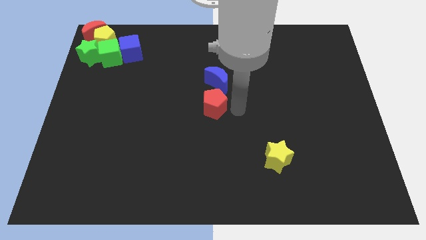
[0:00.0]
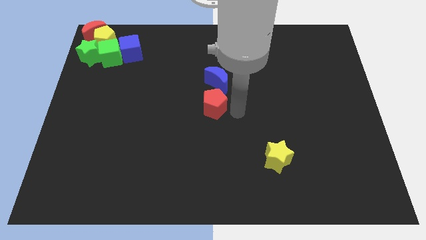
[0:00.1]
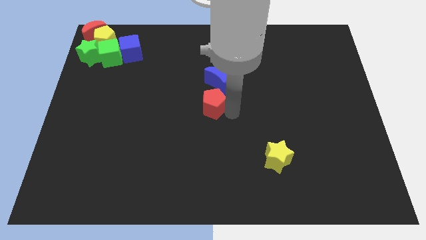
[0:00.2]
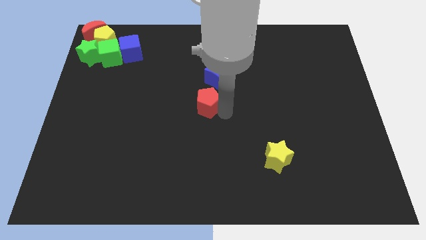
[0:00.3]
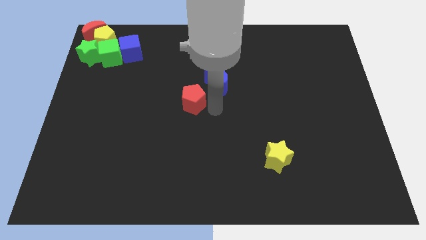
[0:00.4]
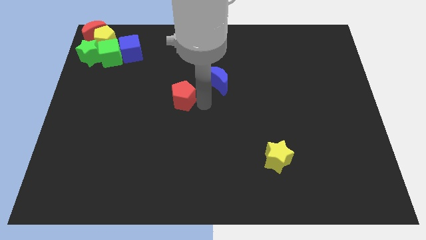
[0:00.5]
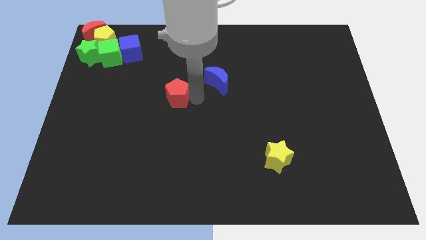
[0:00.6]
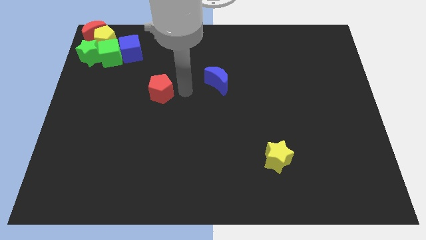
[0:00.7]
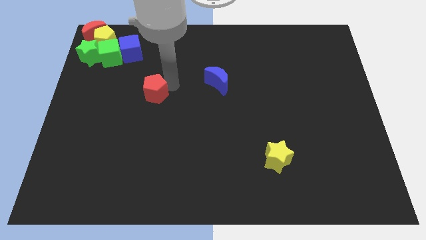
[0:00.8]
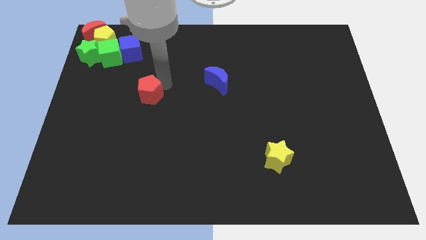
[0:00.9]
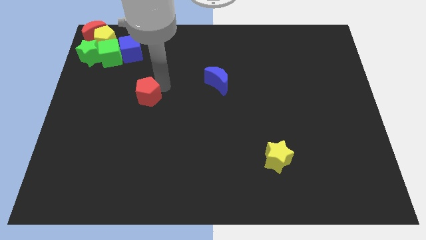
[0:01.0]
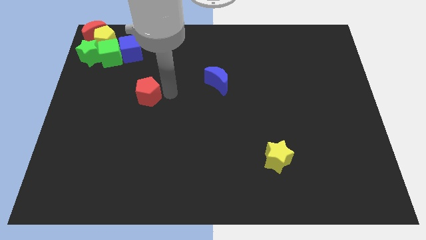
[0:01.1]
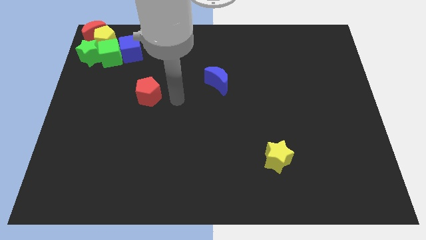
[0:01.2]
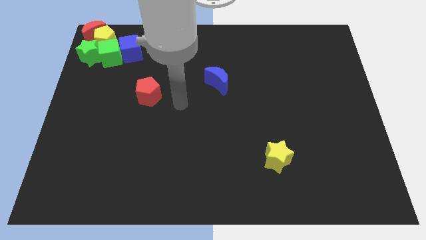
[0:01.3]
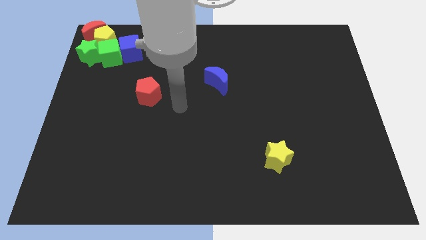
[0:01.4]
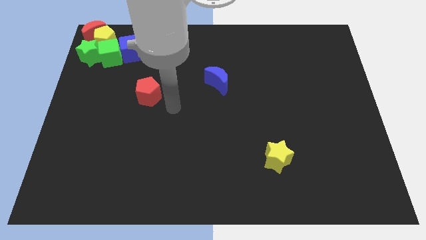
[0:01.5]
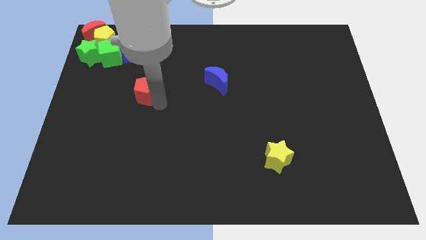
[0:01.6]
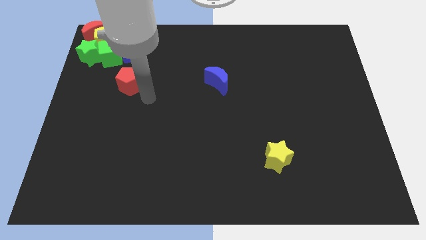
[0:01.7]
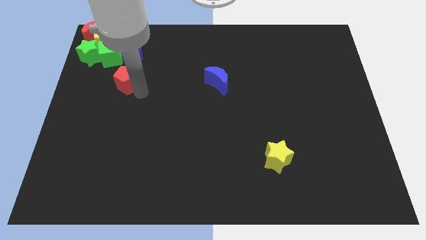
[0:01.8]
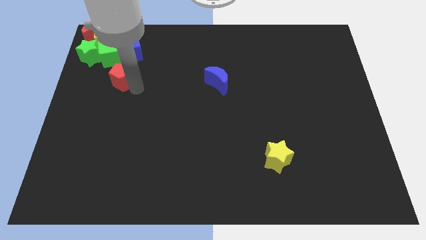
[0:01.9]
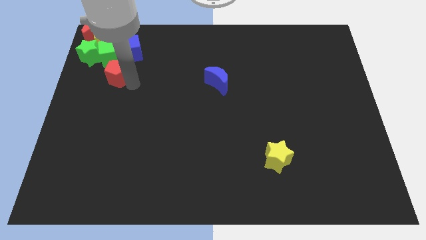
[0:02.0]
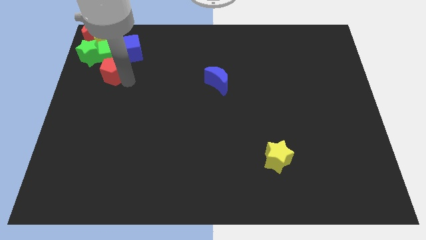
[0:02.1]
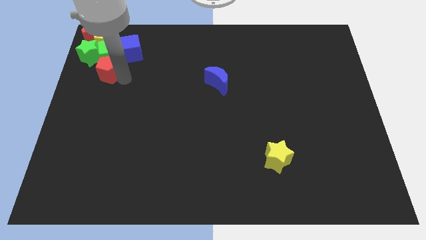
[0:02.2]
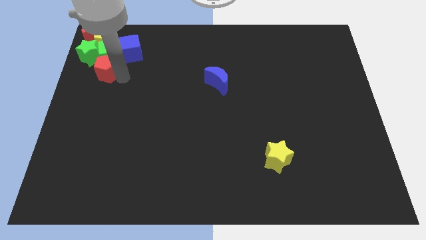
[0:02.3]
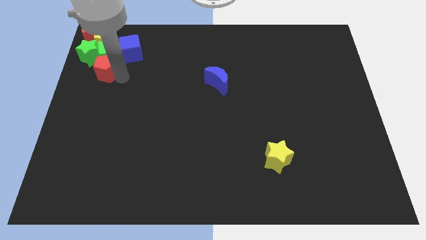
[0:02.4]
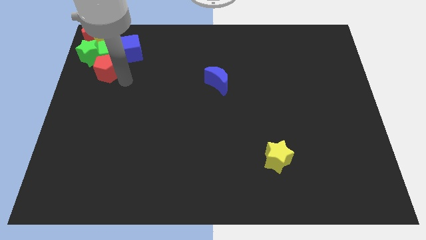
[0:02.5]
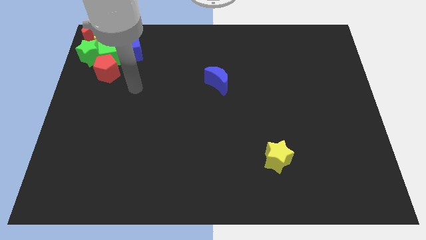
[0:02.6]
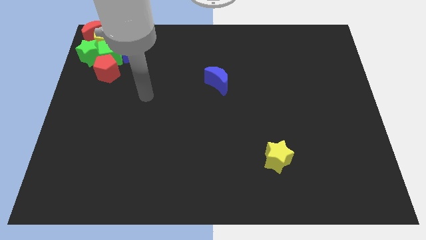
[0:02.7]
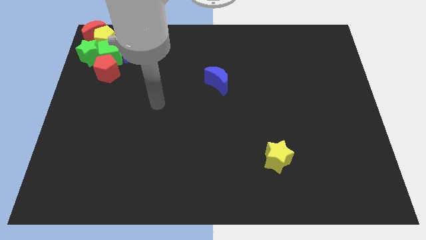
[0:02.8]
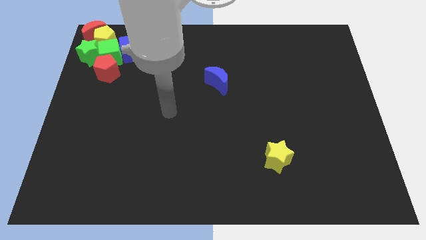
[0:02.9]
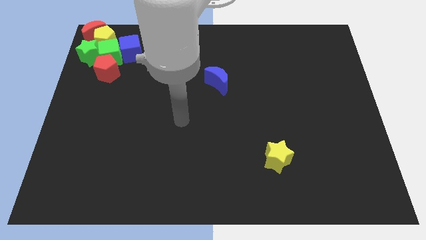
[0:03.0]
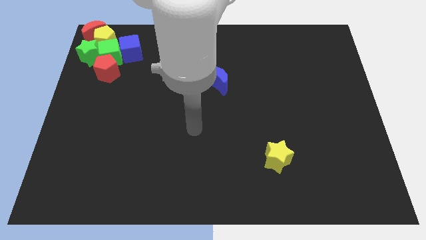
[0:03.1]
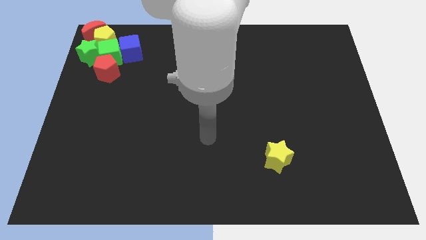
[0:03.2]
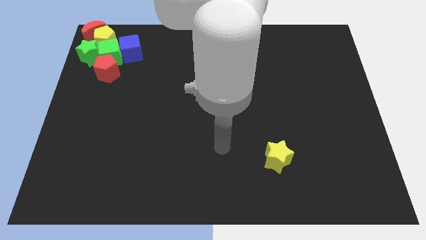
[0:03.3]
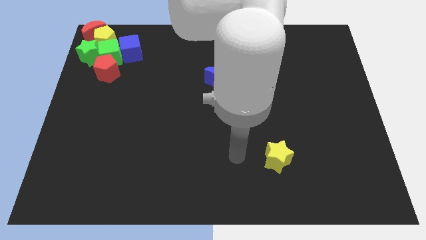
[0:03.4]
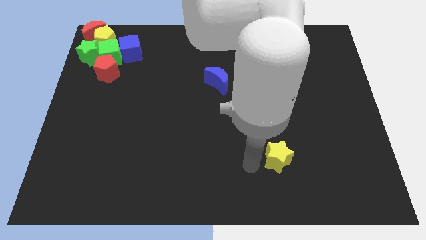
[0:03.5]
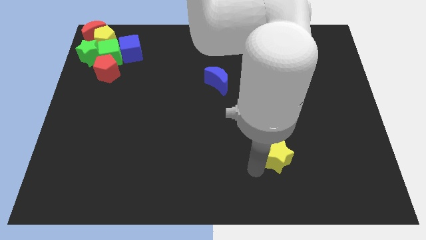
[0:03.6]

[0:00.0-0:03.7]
move red pentagon below the green cube

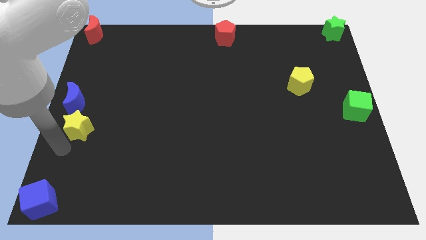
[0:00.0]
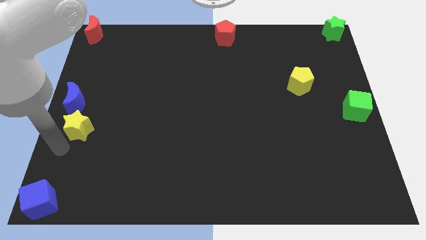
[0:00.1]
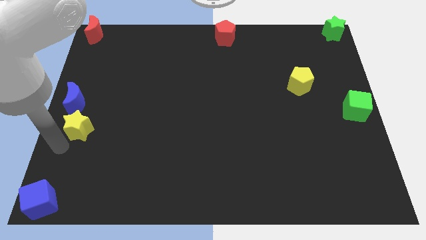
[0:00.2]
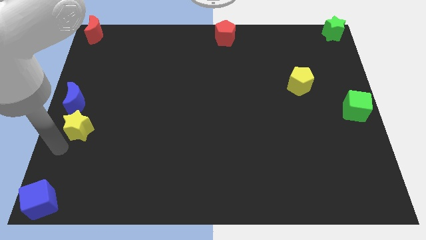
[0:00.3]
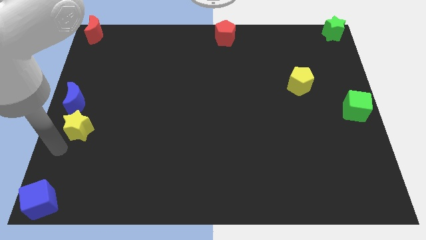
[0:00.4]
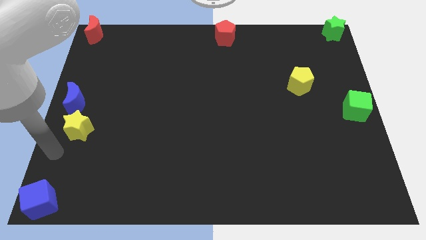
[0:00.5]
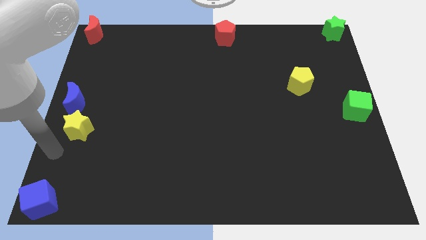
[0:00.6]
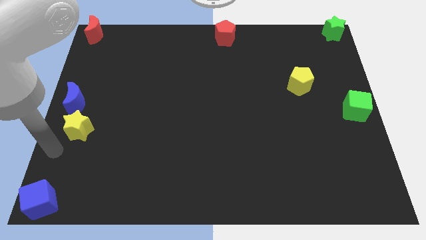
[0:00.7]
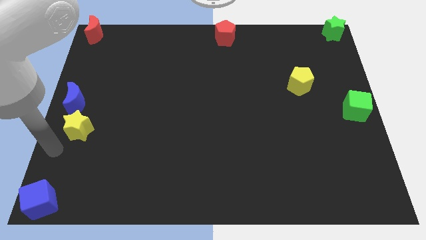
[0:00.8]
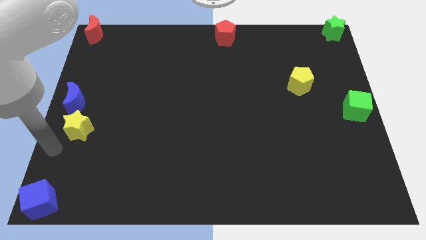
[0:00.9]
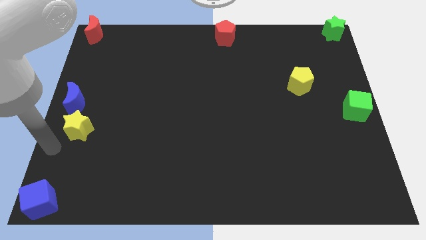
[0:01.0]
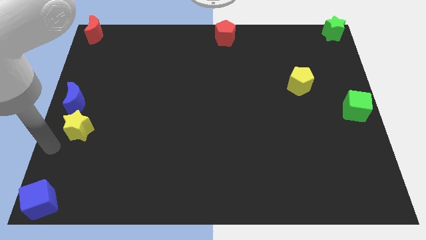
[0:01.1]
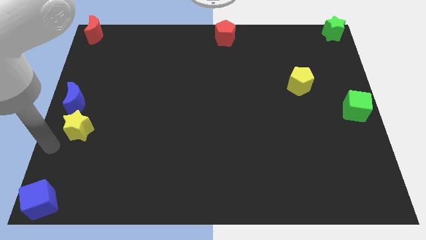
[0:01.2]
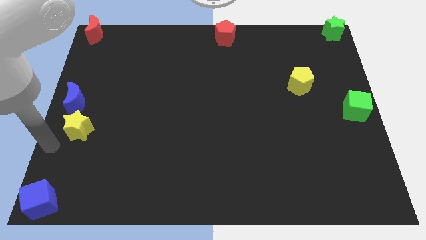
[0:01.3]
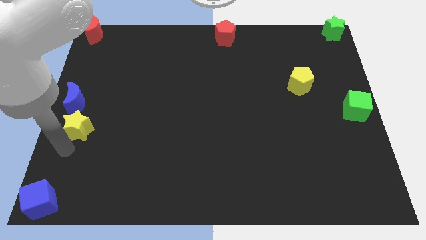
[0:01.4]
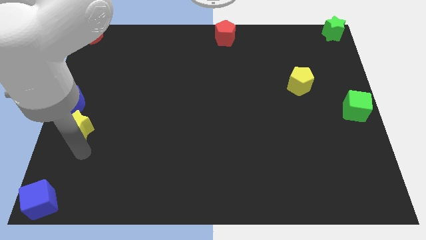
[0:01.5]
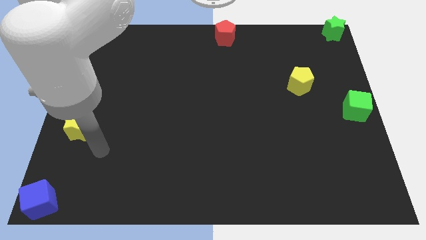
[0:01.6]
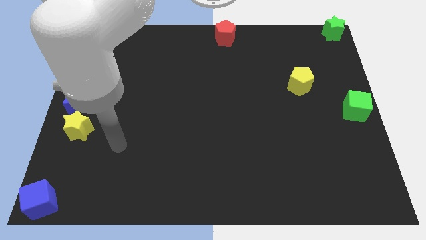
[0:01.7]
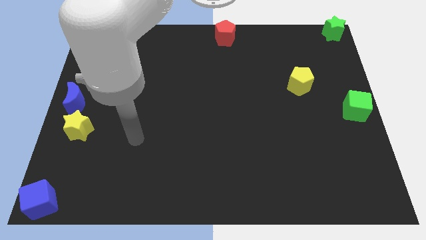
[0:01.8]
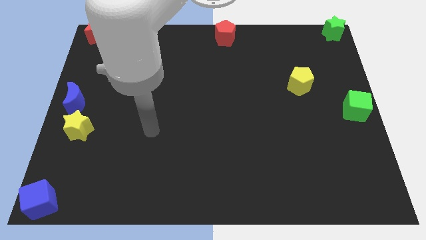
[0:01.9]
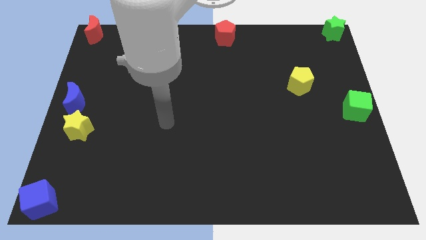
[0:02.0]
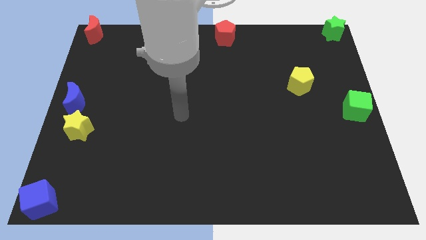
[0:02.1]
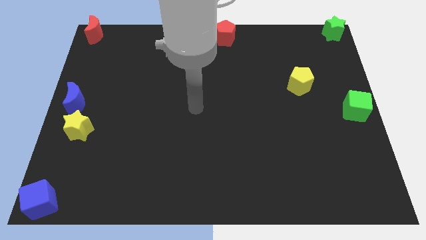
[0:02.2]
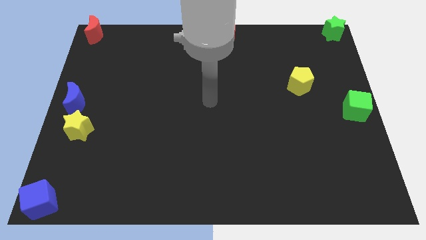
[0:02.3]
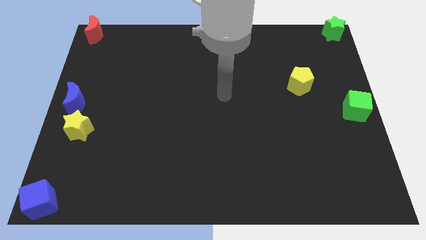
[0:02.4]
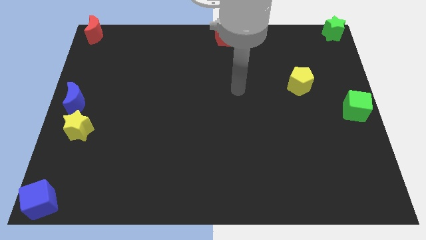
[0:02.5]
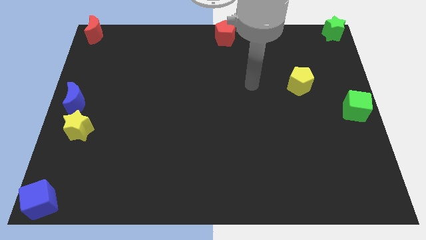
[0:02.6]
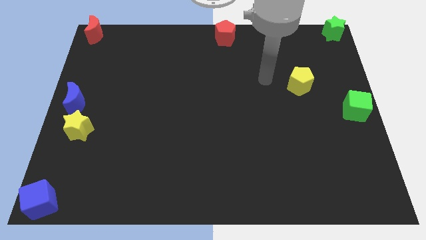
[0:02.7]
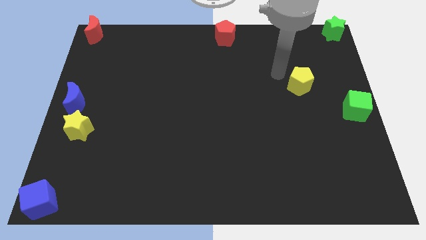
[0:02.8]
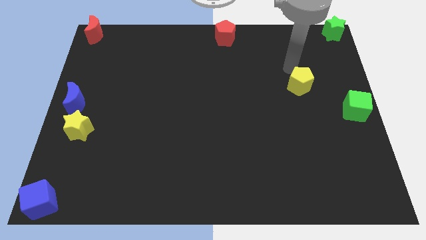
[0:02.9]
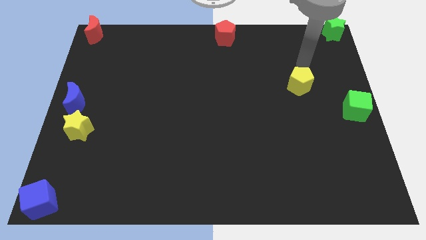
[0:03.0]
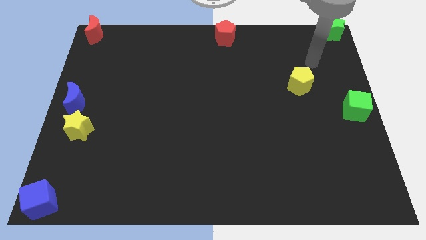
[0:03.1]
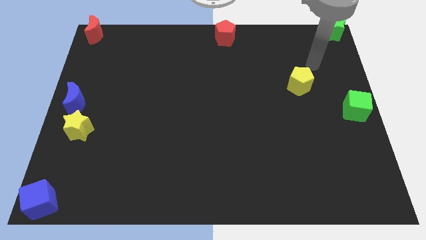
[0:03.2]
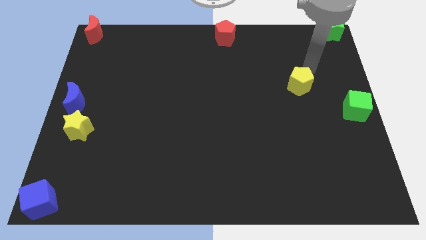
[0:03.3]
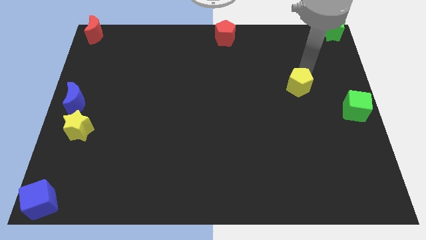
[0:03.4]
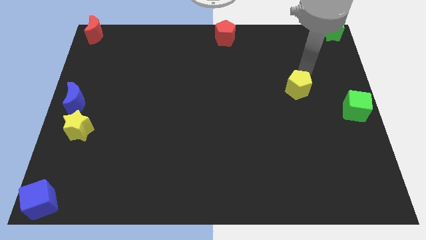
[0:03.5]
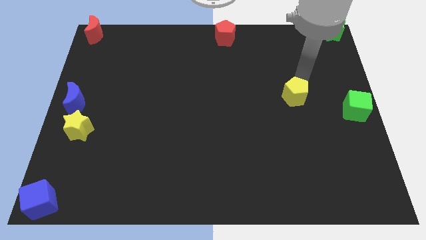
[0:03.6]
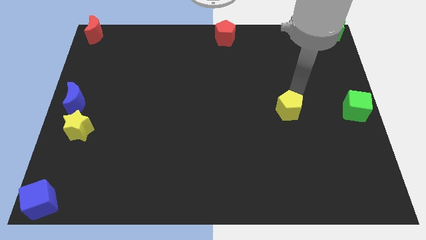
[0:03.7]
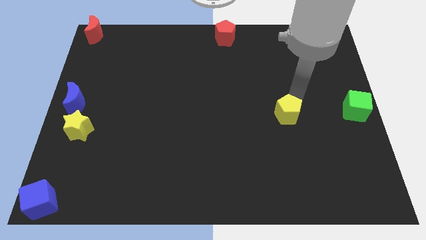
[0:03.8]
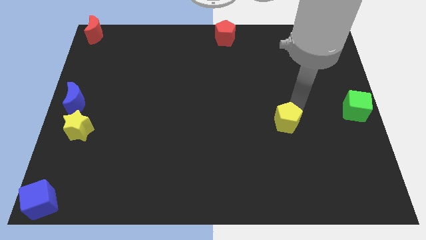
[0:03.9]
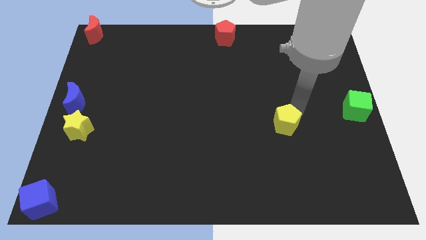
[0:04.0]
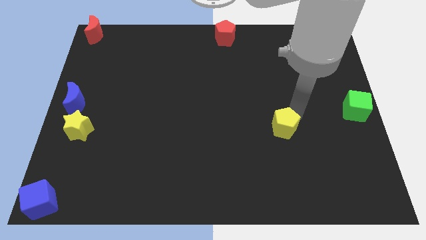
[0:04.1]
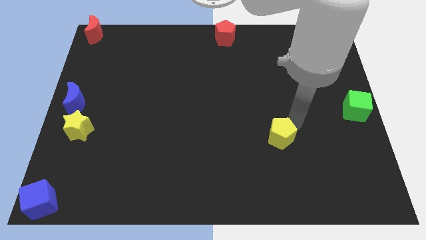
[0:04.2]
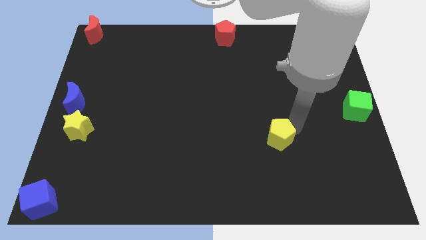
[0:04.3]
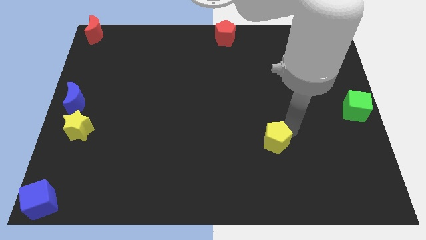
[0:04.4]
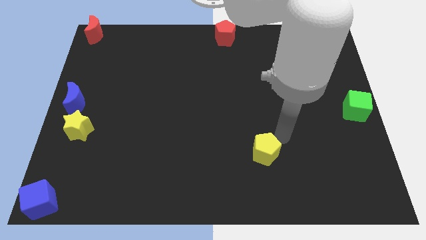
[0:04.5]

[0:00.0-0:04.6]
move the yellow pentagon towards bottom side

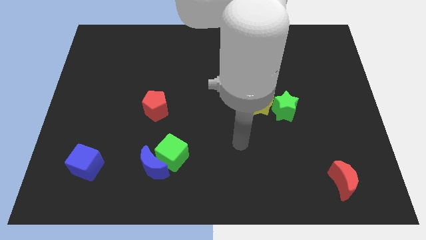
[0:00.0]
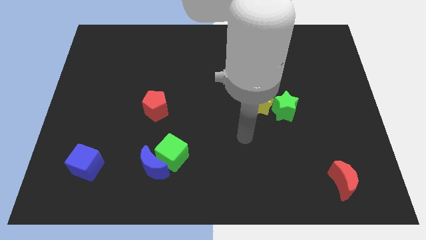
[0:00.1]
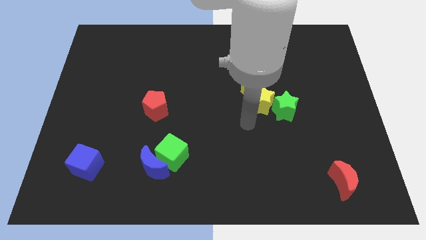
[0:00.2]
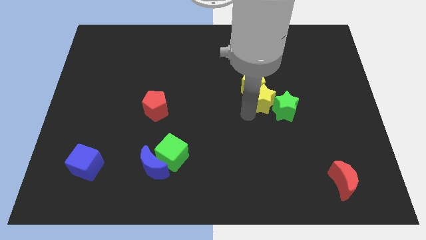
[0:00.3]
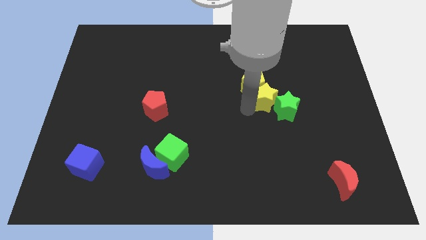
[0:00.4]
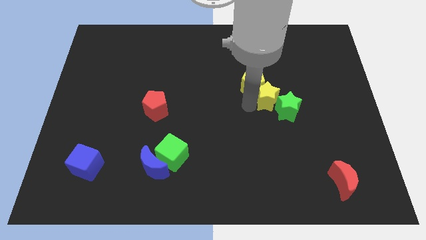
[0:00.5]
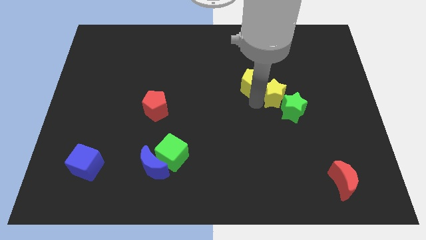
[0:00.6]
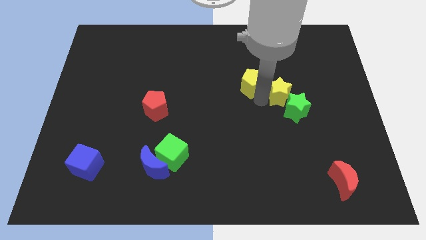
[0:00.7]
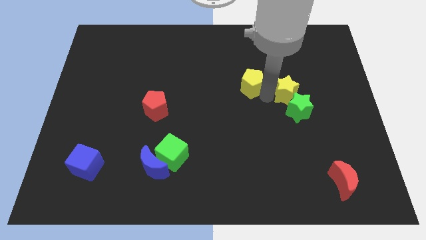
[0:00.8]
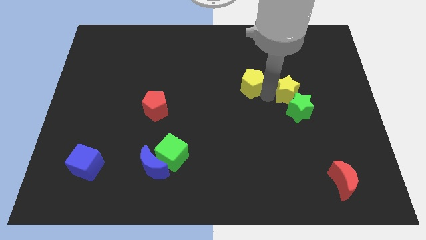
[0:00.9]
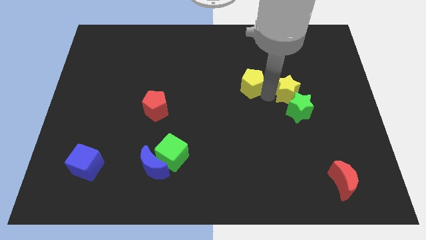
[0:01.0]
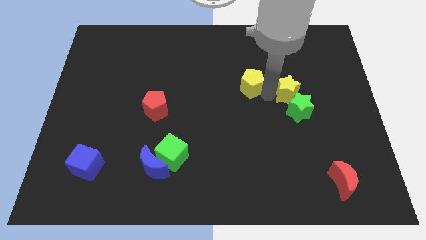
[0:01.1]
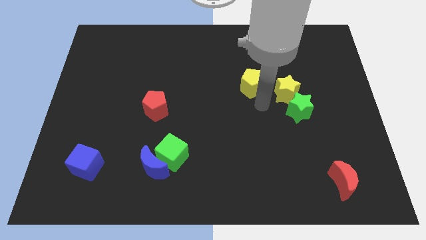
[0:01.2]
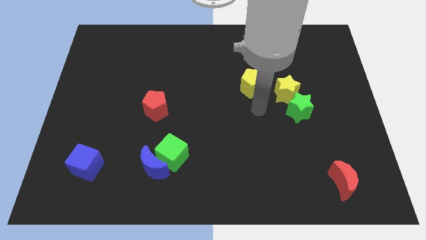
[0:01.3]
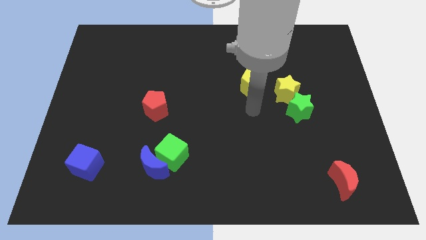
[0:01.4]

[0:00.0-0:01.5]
move the yellow star slightly upside to the green star
